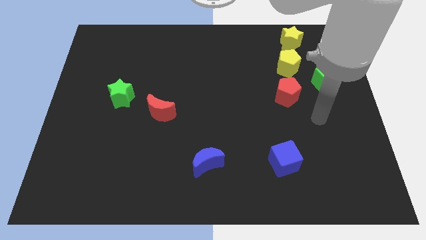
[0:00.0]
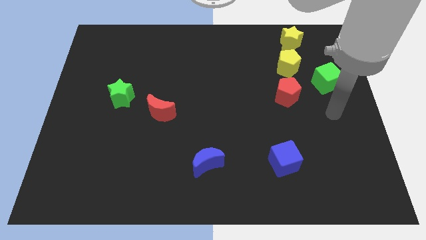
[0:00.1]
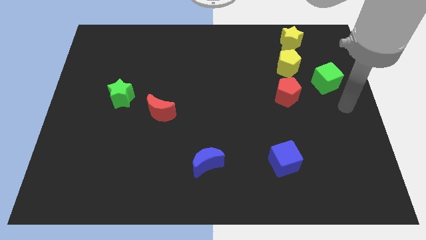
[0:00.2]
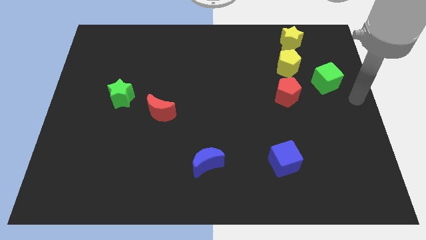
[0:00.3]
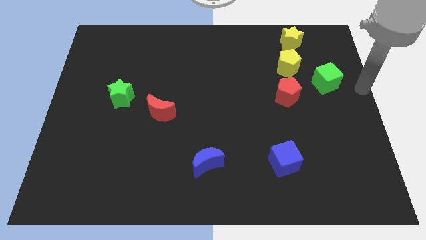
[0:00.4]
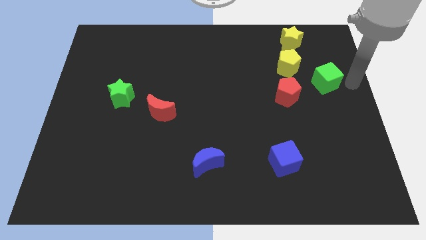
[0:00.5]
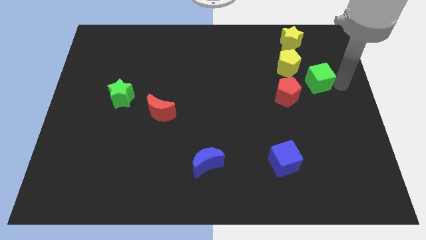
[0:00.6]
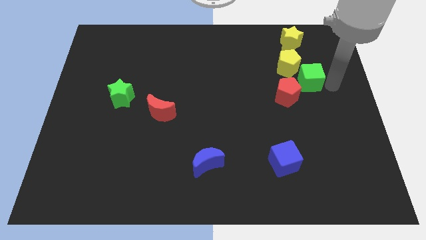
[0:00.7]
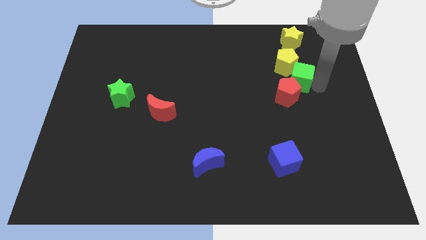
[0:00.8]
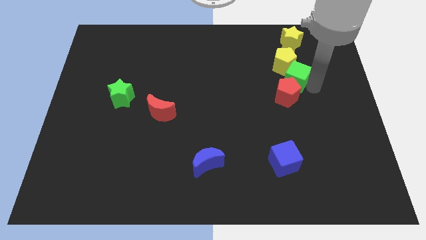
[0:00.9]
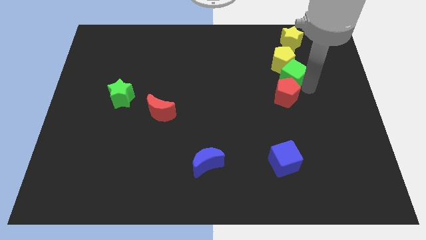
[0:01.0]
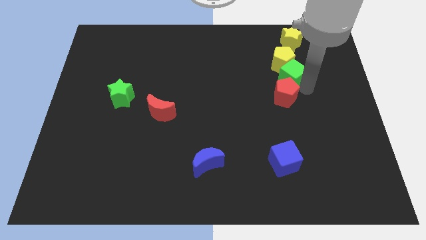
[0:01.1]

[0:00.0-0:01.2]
push green cube in between yellow pentagon and red pentagon

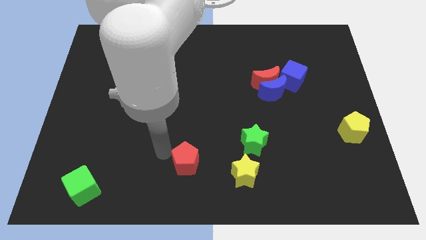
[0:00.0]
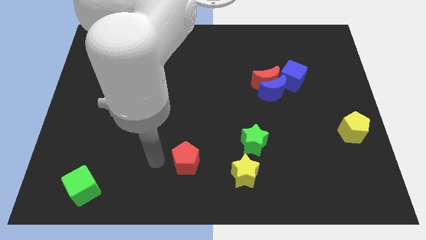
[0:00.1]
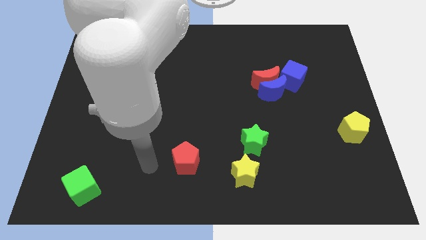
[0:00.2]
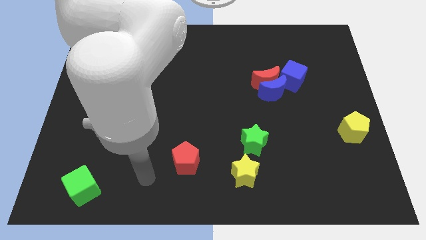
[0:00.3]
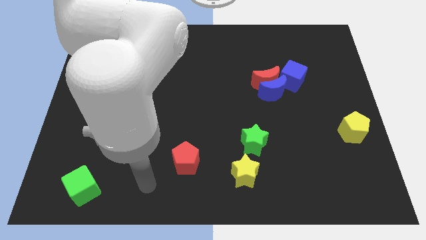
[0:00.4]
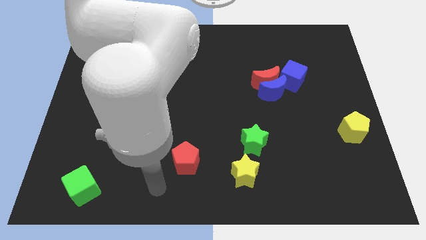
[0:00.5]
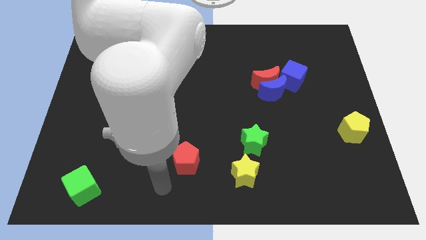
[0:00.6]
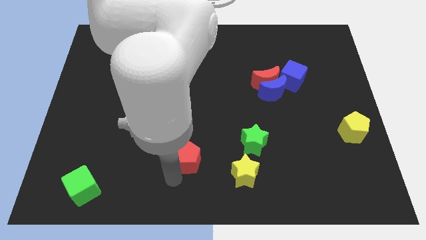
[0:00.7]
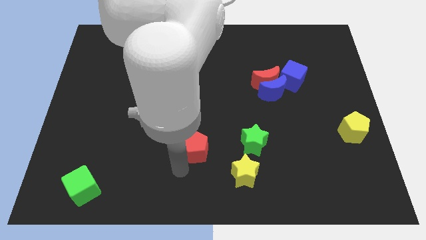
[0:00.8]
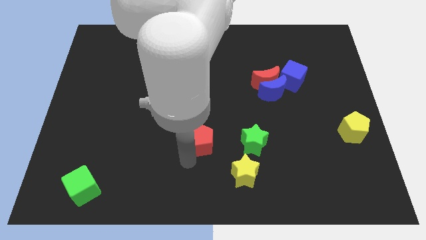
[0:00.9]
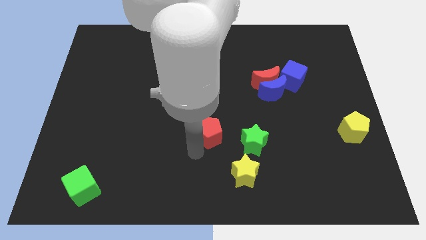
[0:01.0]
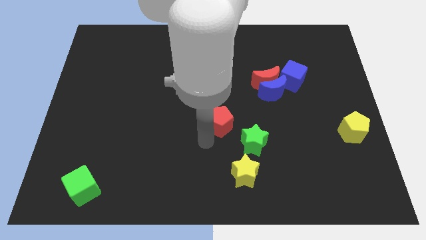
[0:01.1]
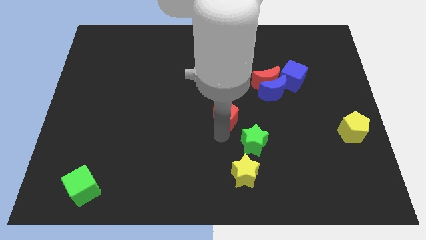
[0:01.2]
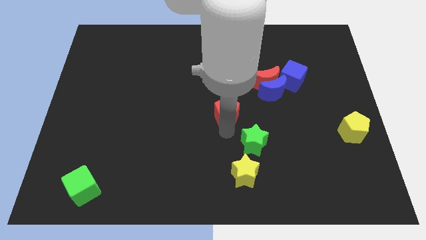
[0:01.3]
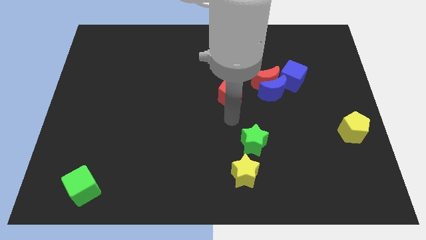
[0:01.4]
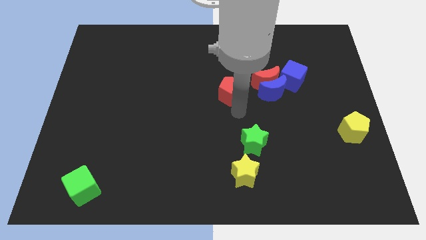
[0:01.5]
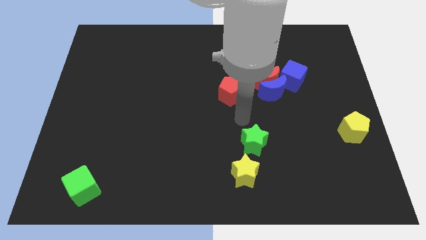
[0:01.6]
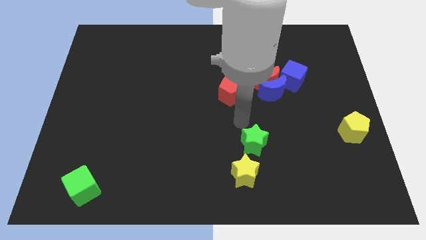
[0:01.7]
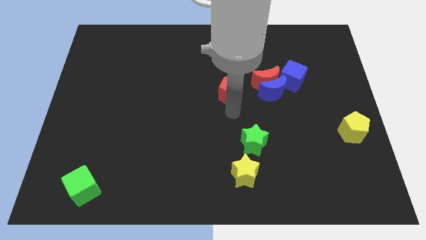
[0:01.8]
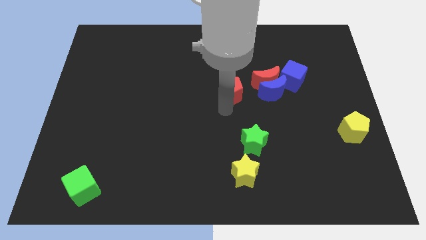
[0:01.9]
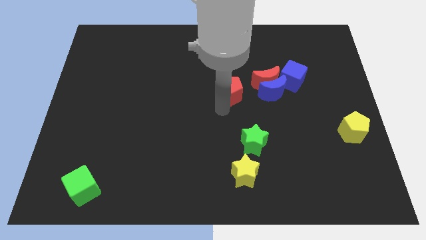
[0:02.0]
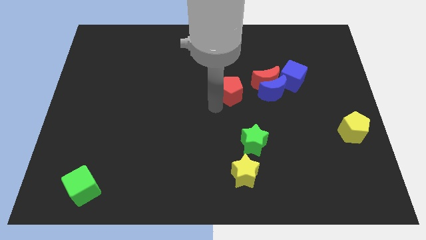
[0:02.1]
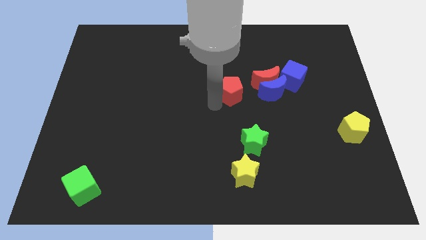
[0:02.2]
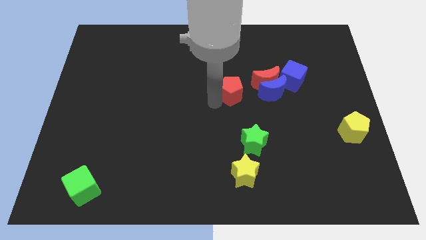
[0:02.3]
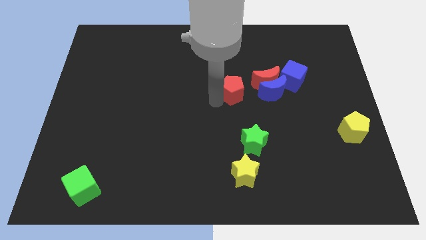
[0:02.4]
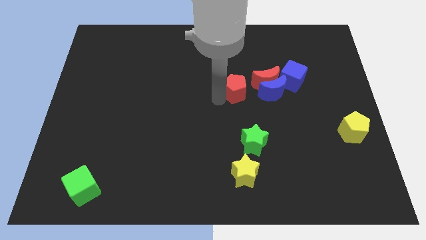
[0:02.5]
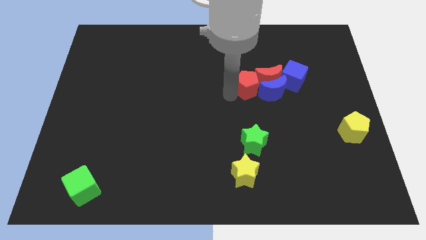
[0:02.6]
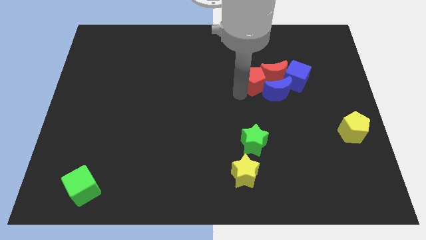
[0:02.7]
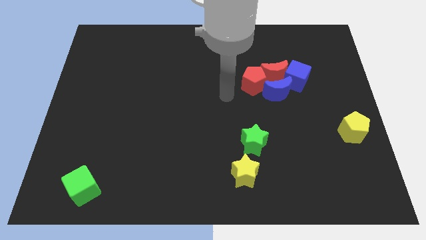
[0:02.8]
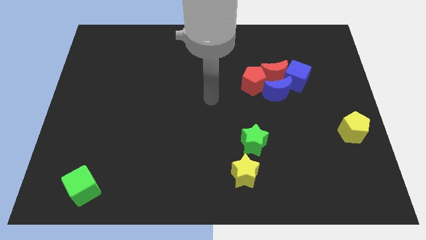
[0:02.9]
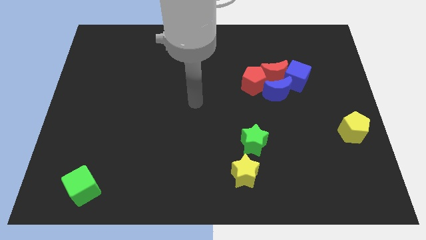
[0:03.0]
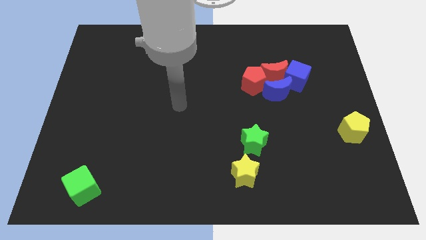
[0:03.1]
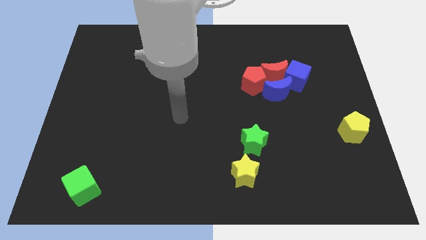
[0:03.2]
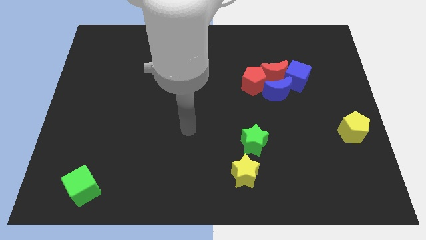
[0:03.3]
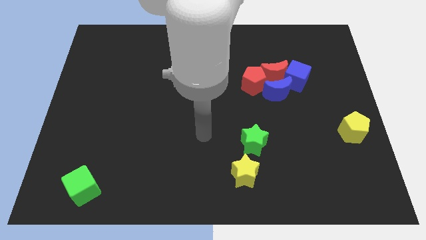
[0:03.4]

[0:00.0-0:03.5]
push the red crescent and blue crescent with red pentagon towards the right top of the board

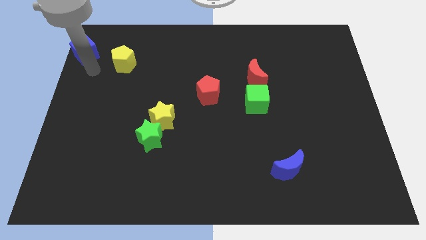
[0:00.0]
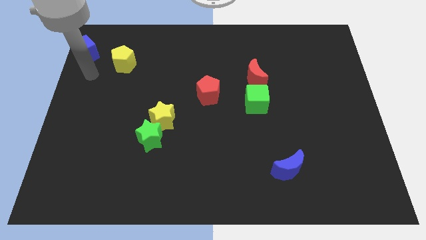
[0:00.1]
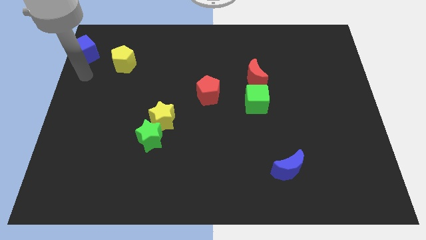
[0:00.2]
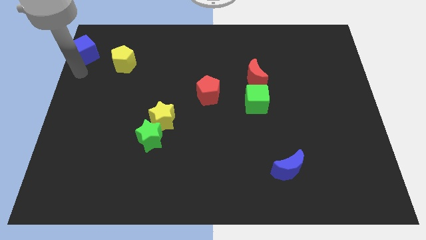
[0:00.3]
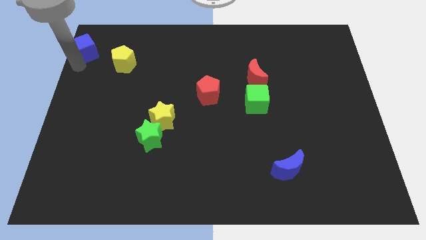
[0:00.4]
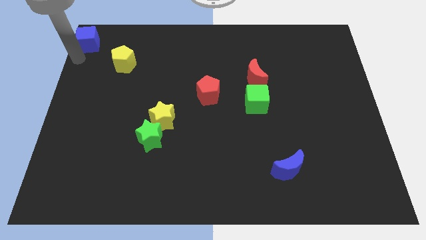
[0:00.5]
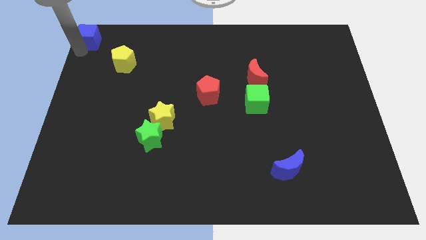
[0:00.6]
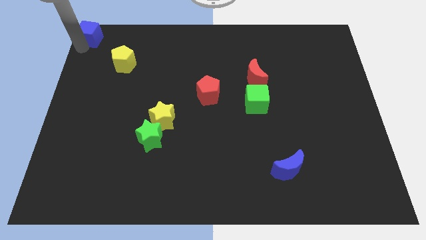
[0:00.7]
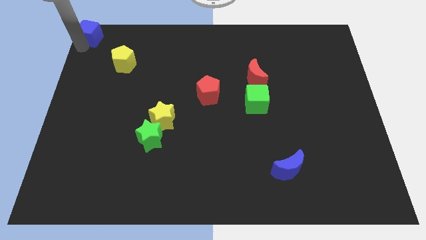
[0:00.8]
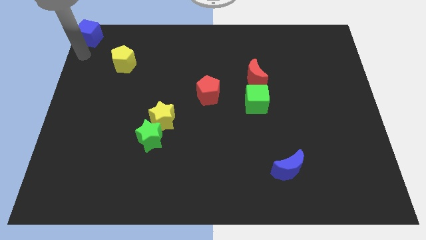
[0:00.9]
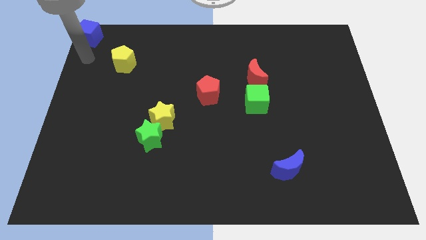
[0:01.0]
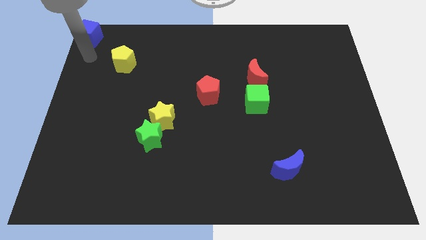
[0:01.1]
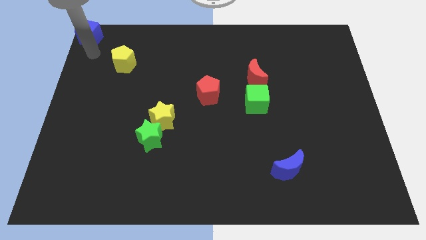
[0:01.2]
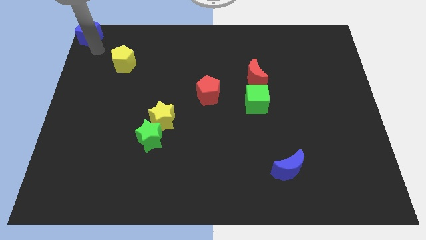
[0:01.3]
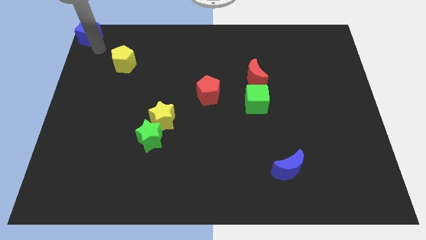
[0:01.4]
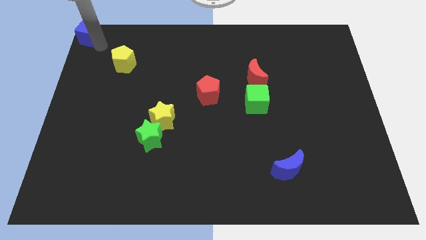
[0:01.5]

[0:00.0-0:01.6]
push the blue cube to the top left corner of the board

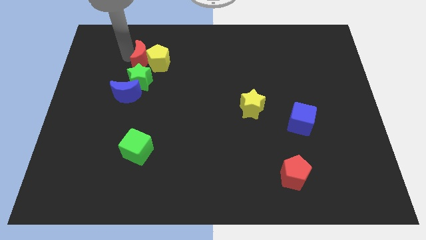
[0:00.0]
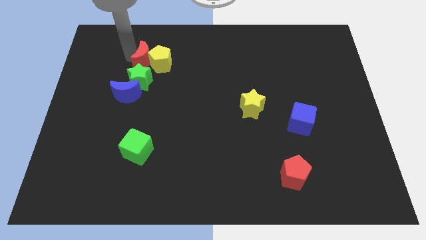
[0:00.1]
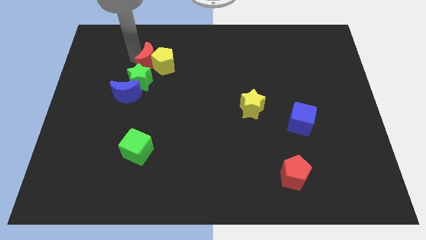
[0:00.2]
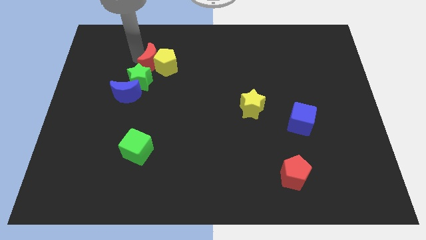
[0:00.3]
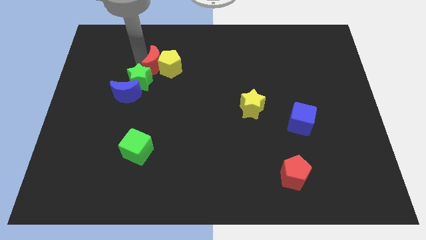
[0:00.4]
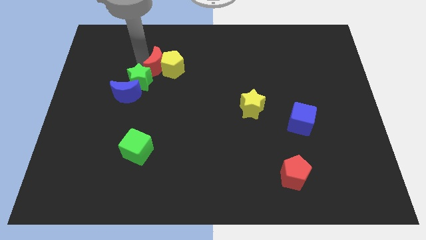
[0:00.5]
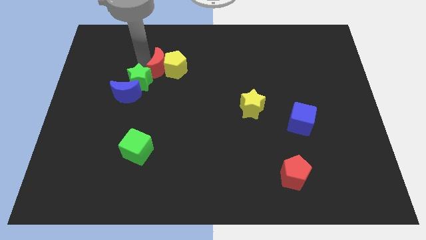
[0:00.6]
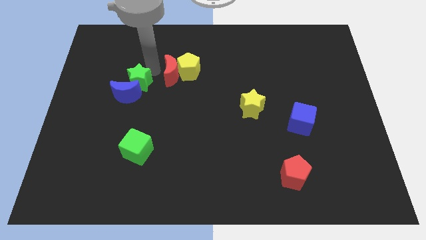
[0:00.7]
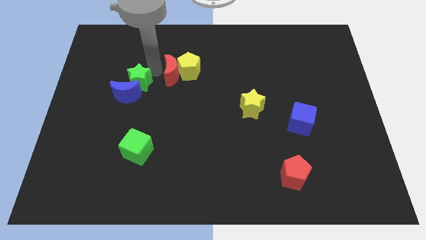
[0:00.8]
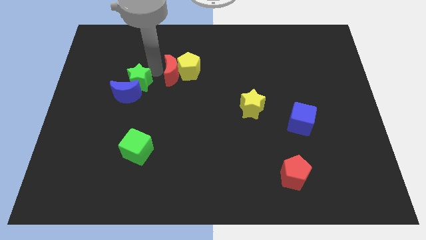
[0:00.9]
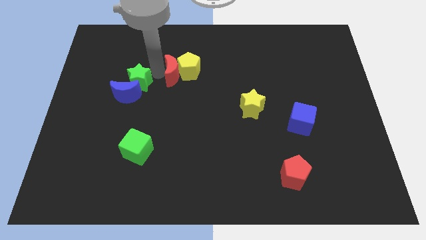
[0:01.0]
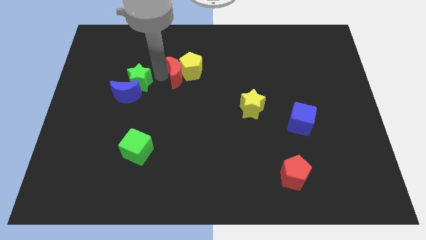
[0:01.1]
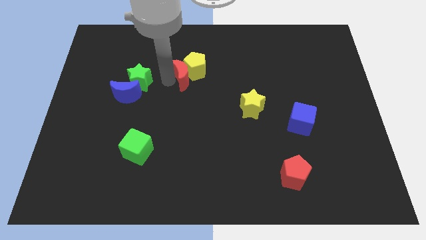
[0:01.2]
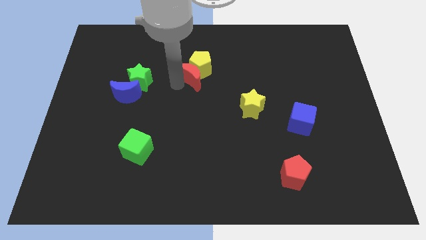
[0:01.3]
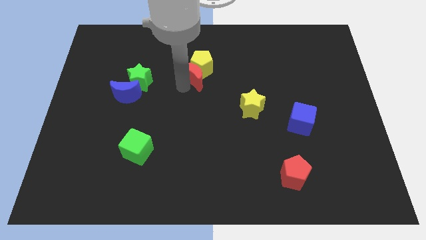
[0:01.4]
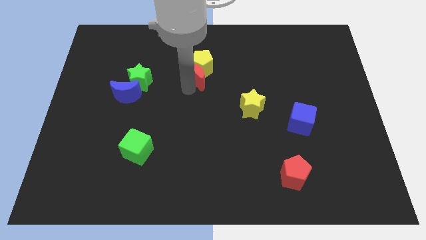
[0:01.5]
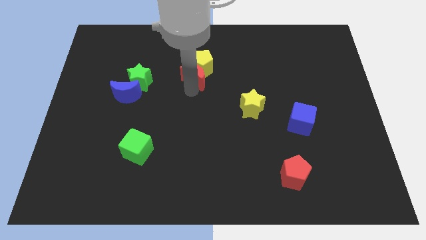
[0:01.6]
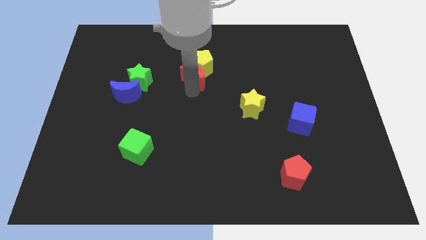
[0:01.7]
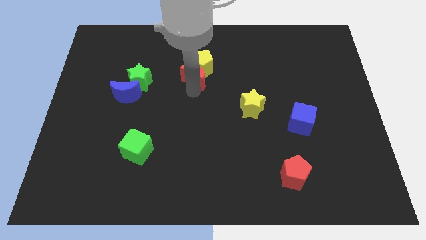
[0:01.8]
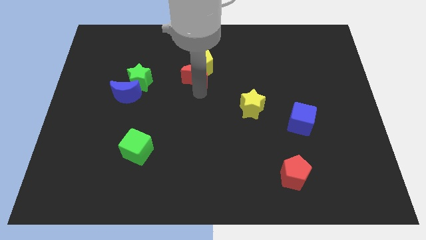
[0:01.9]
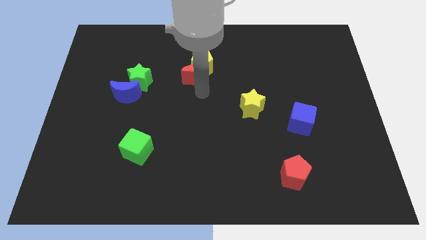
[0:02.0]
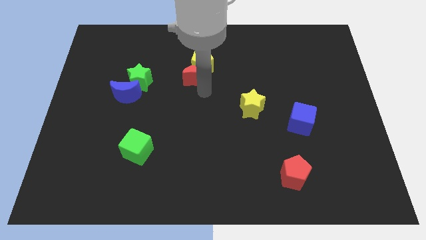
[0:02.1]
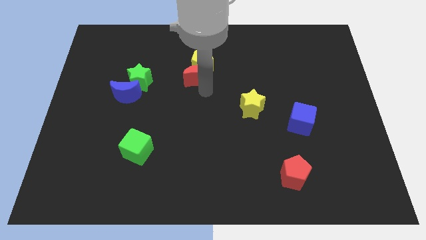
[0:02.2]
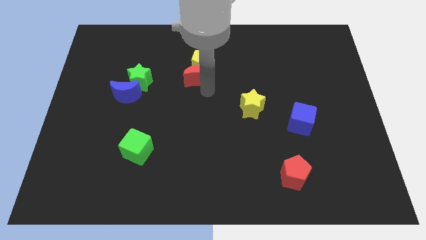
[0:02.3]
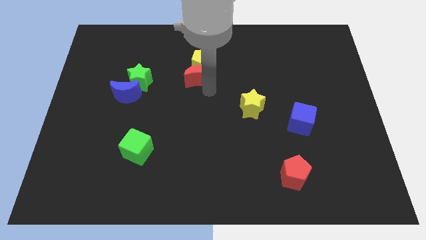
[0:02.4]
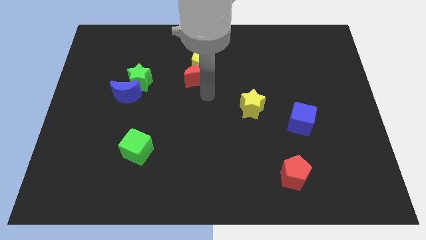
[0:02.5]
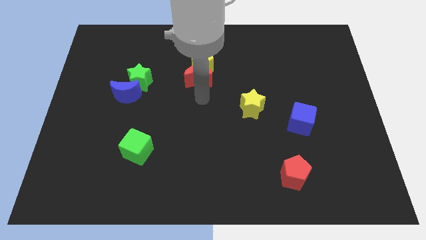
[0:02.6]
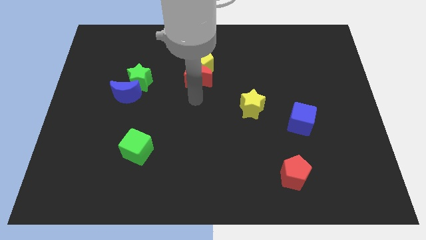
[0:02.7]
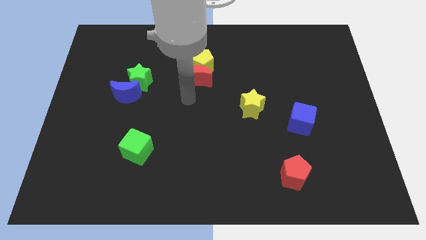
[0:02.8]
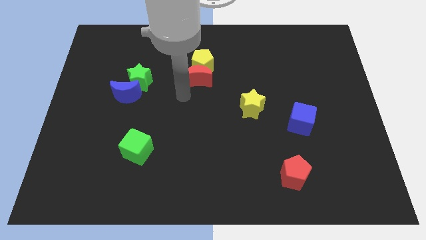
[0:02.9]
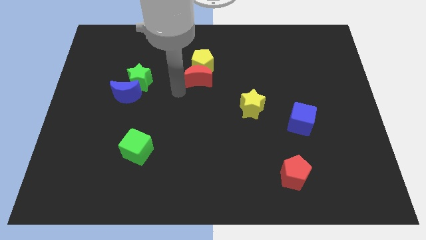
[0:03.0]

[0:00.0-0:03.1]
slide red moon along with yellow pentagon to top left of yellow star
